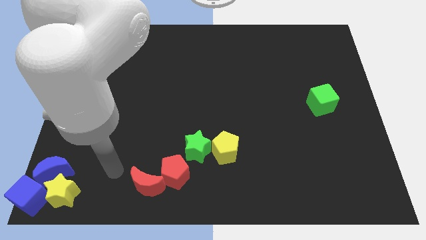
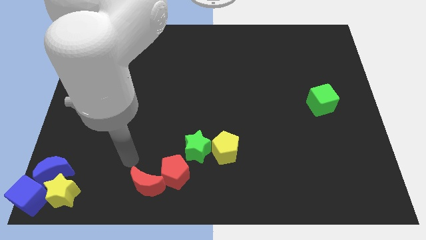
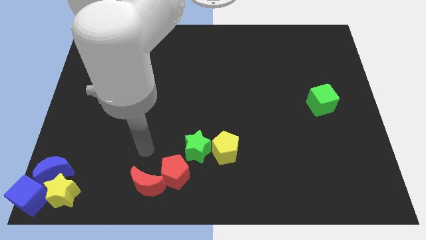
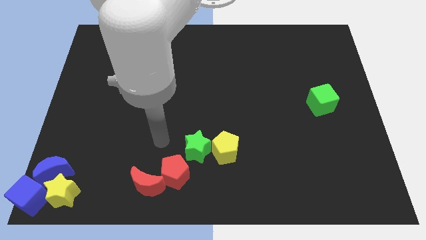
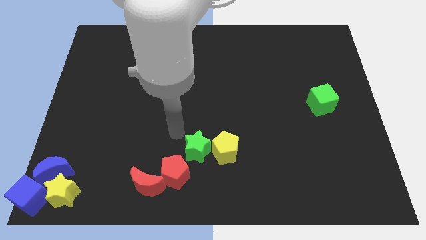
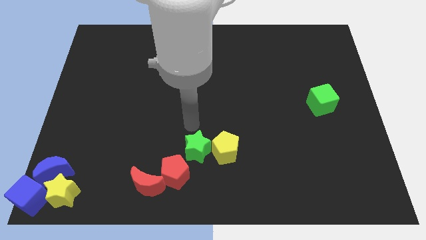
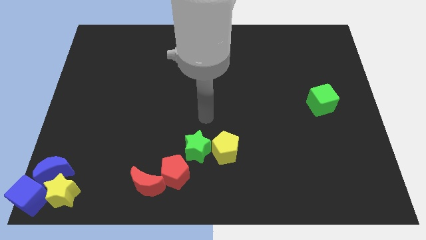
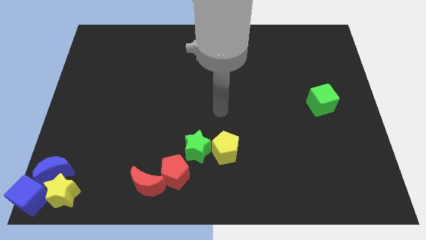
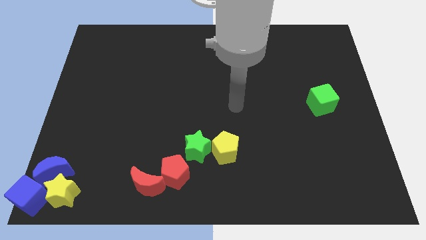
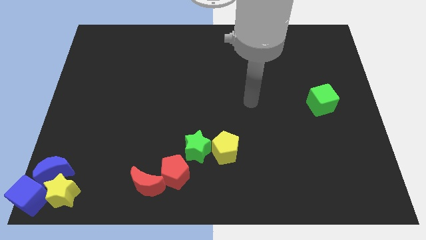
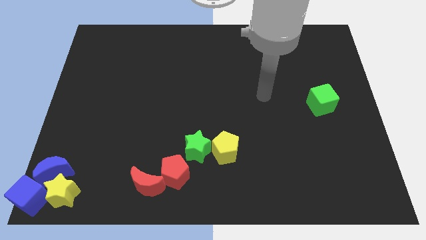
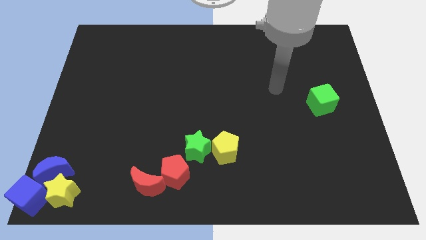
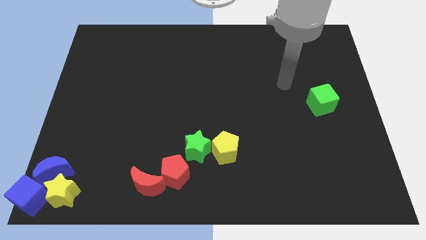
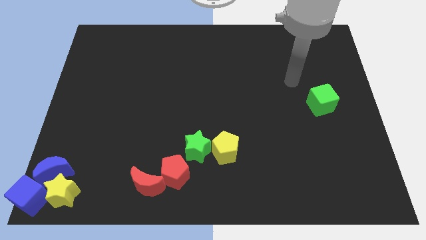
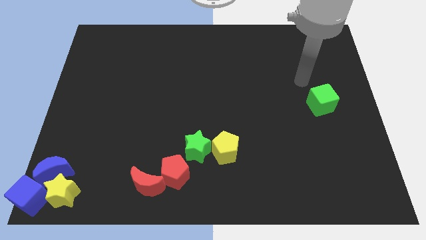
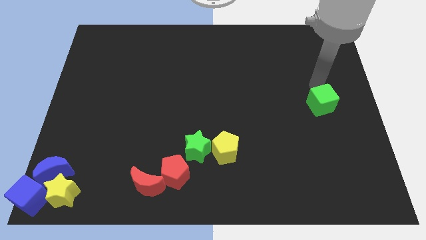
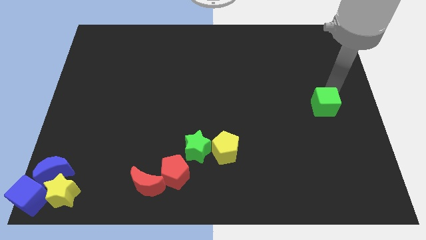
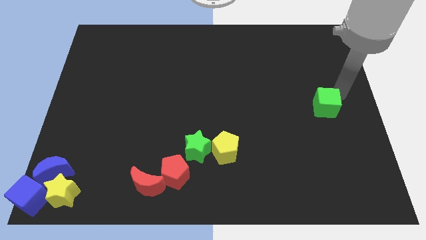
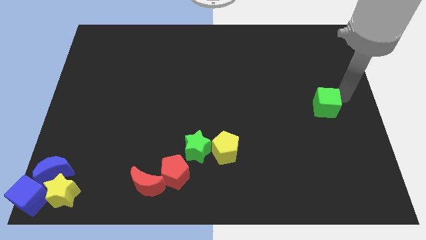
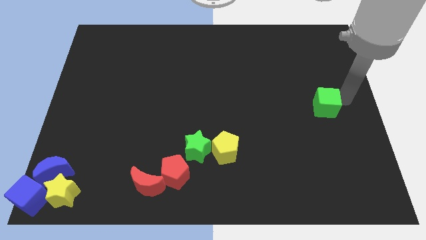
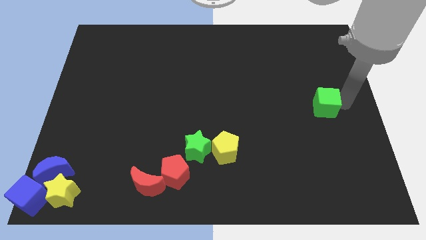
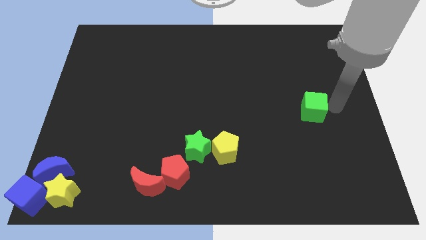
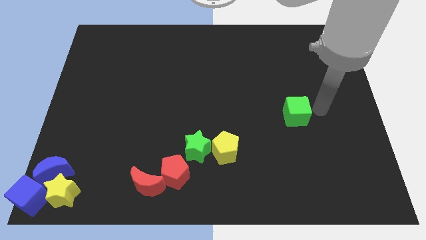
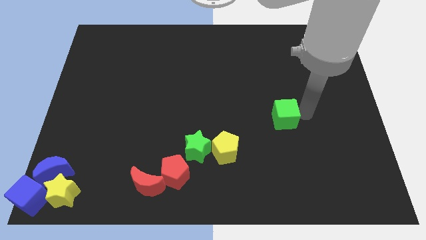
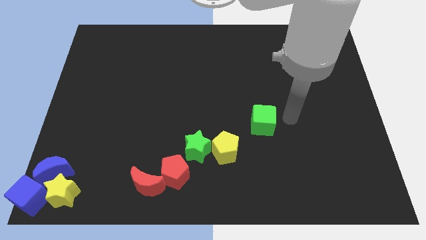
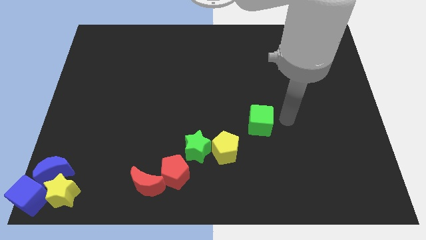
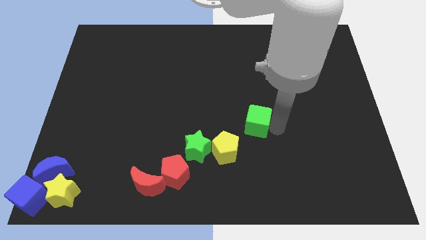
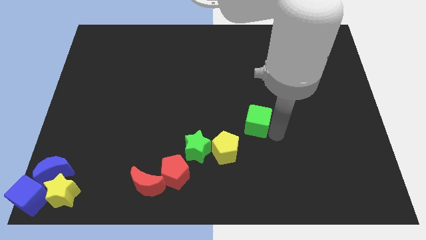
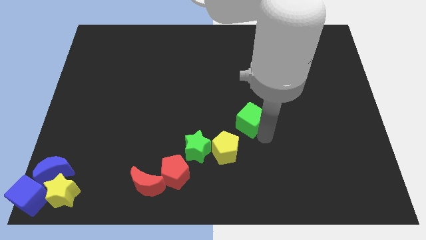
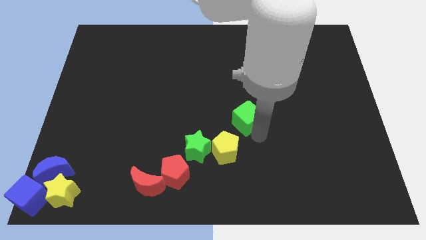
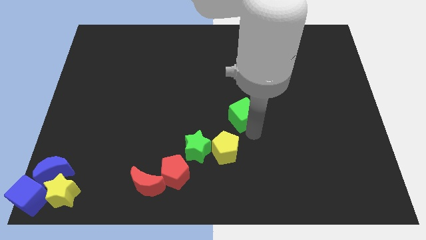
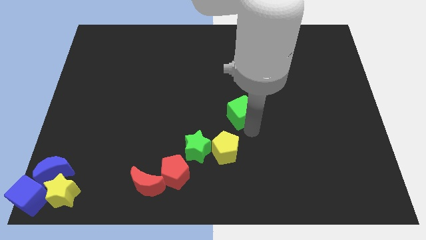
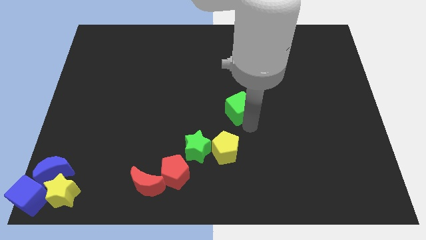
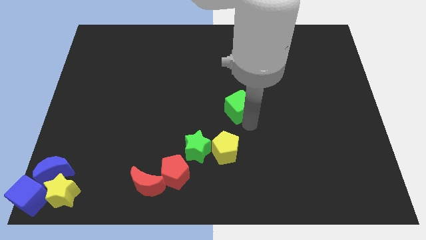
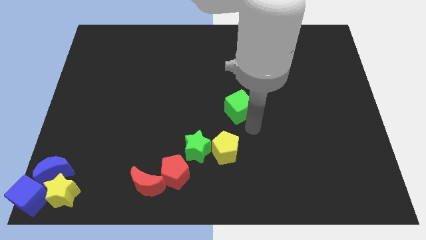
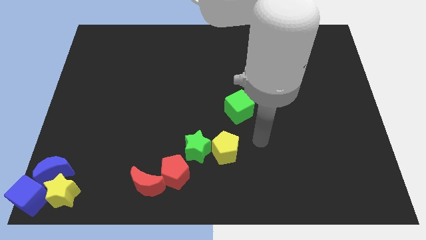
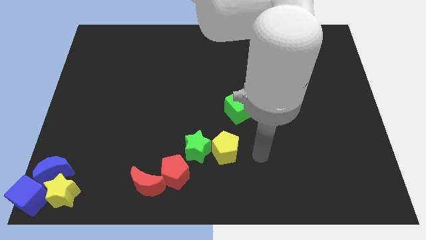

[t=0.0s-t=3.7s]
place the green cube at the top of the yellow pentagon

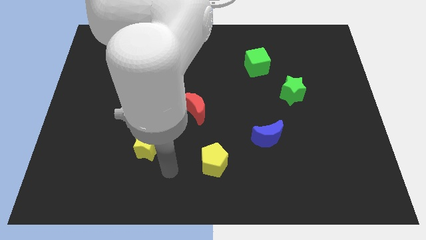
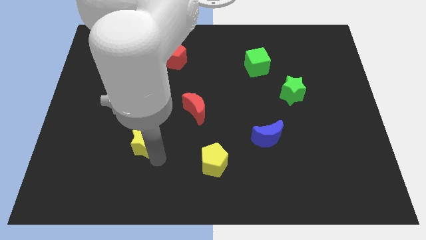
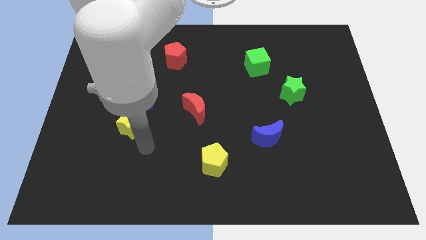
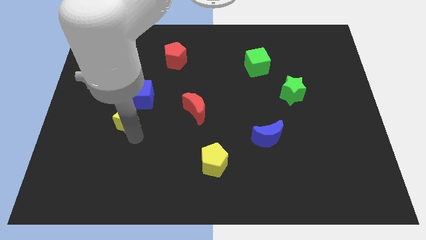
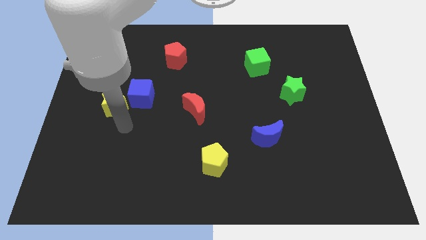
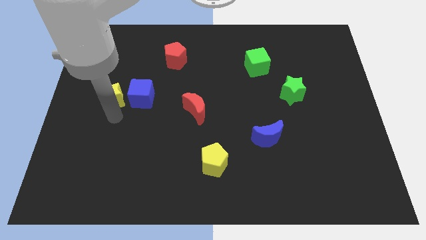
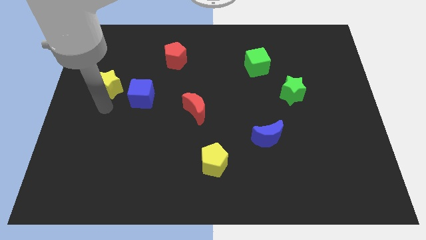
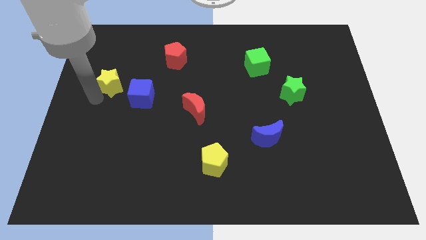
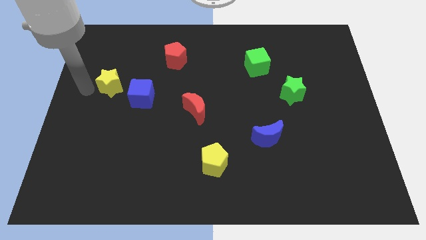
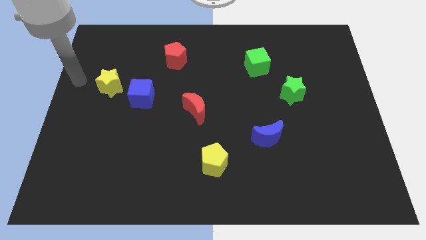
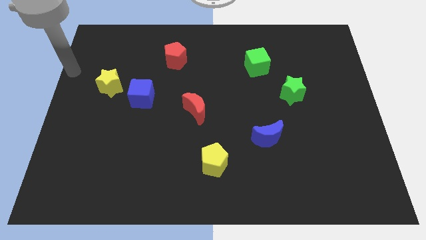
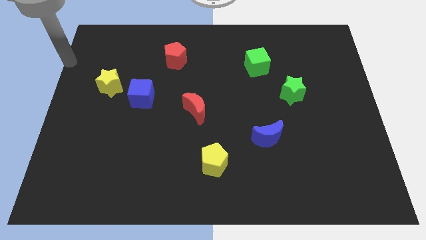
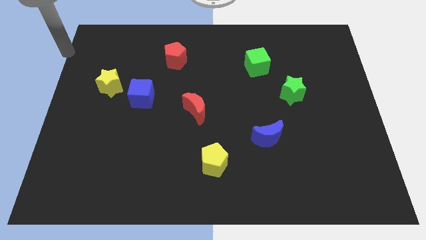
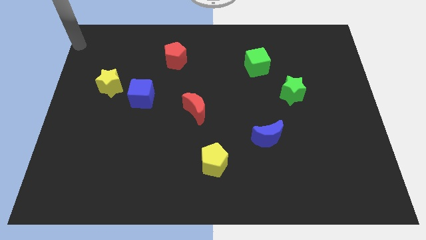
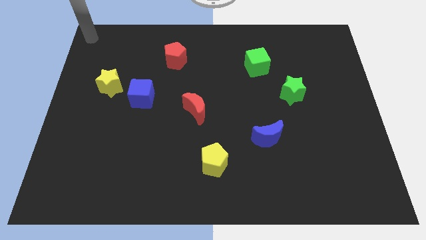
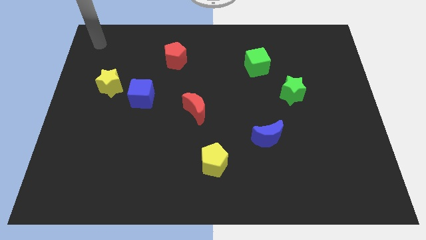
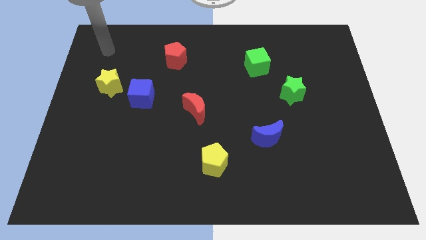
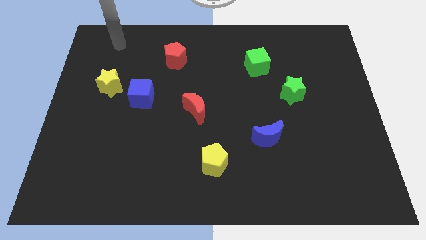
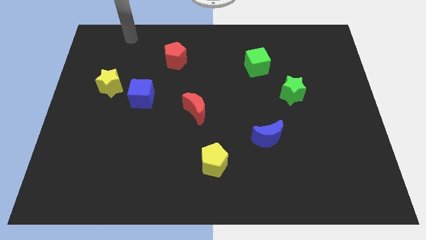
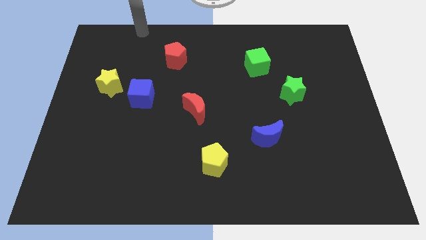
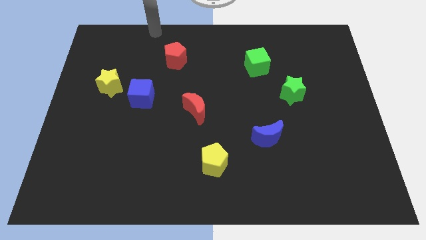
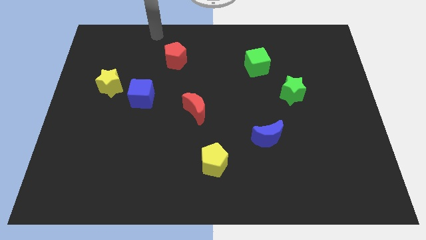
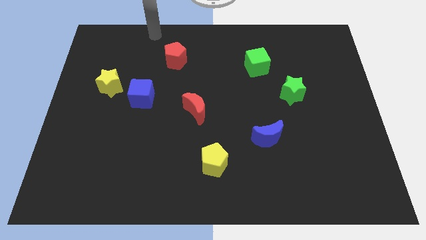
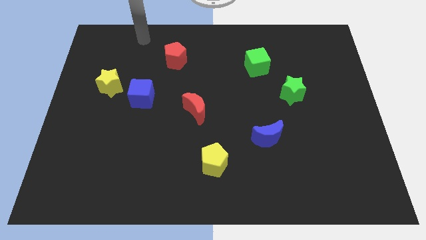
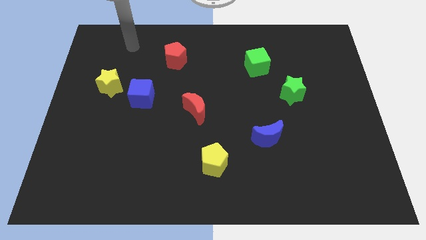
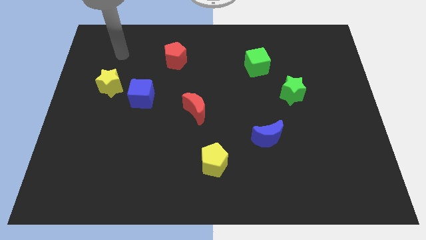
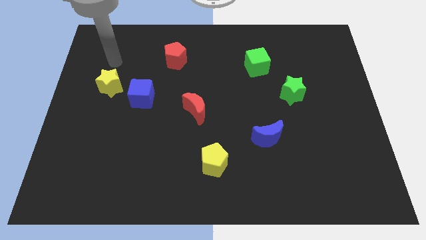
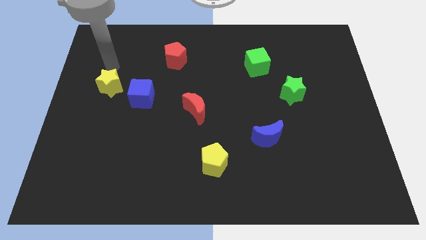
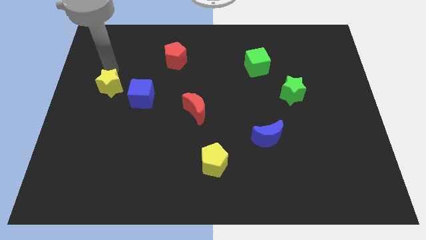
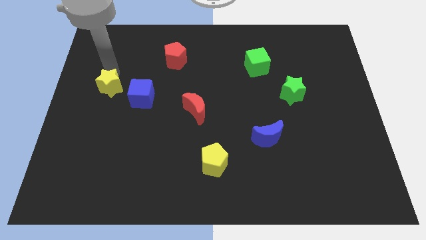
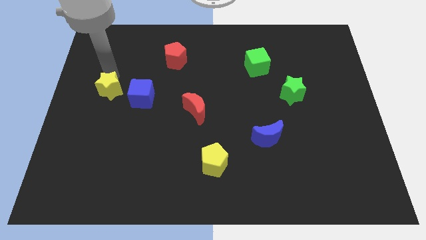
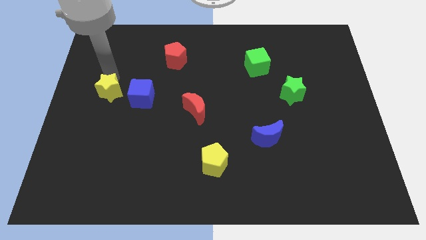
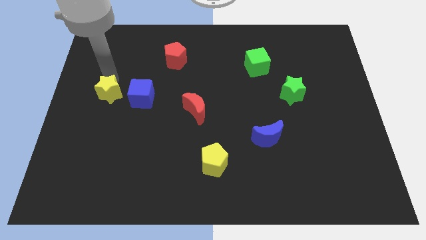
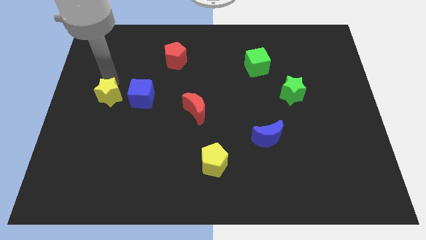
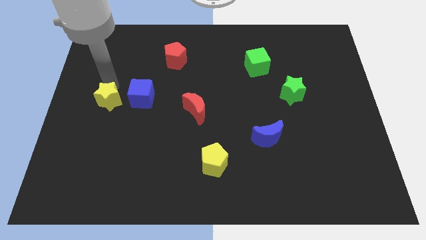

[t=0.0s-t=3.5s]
push the yellow star to the left of the blue cube

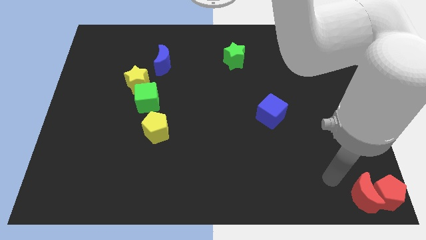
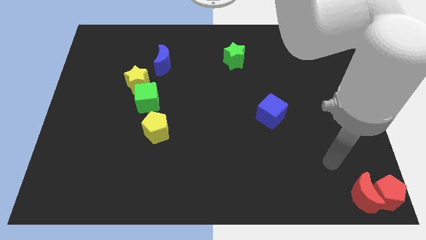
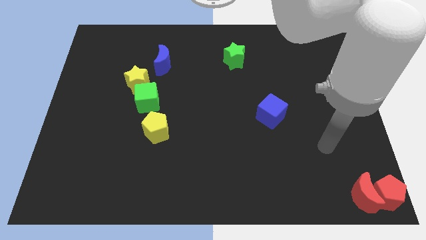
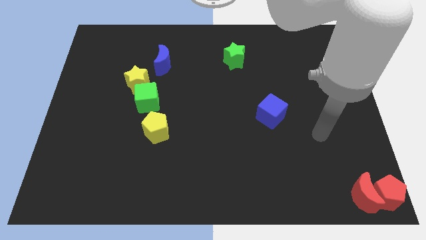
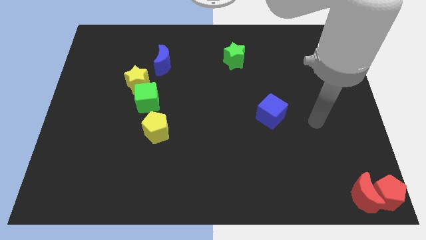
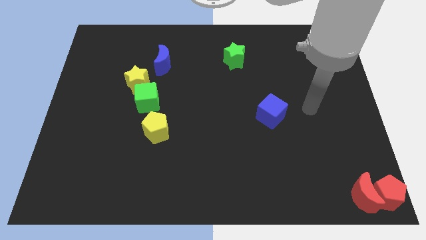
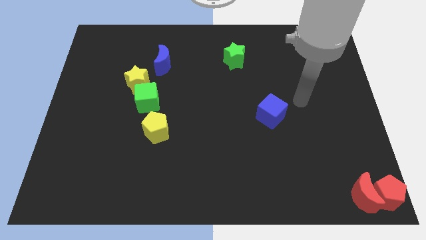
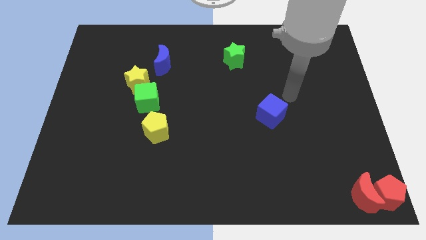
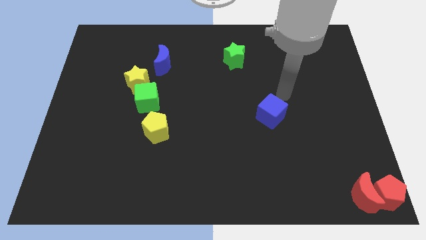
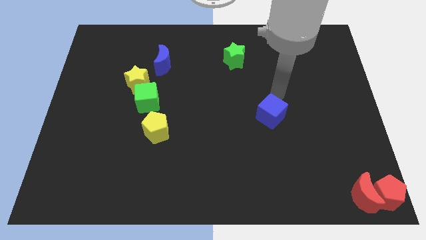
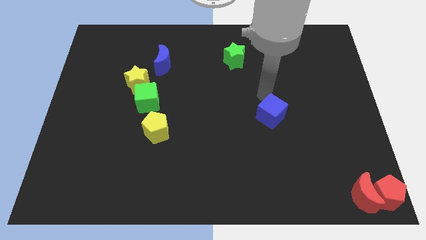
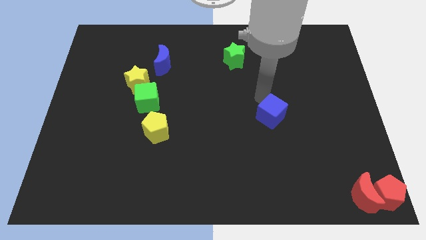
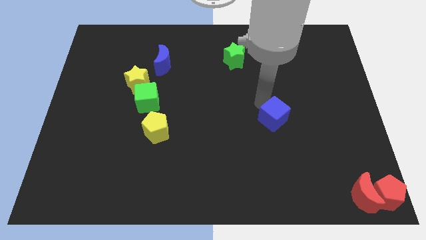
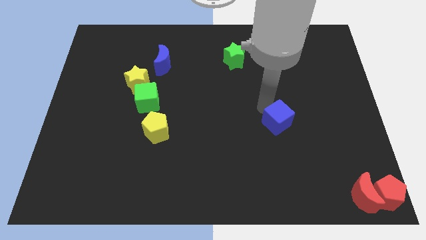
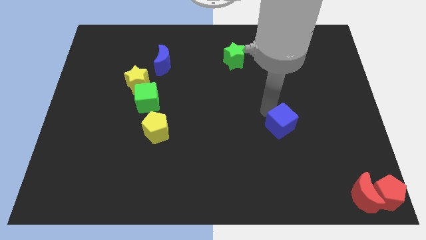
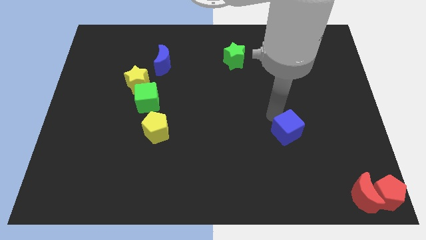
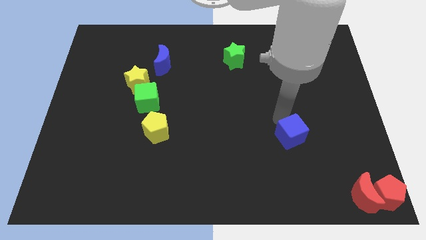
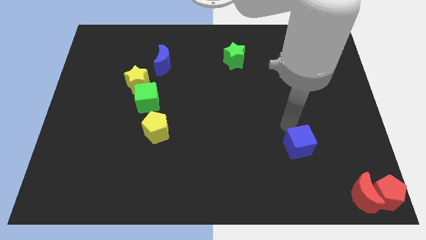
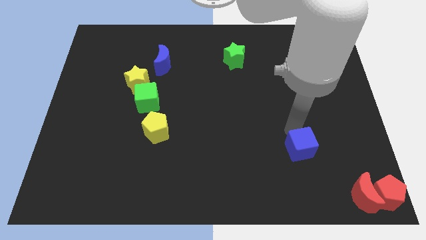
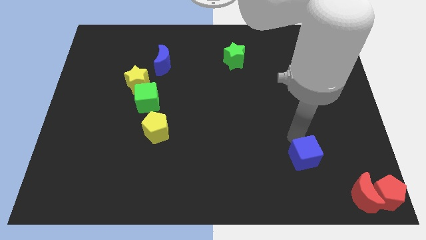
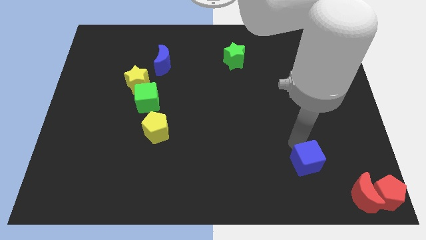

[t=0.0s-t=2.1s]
push blue cube towards bottom right corner
